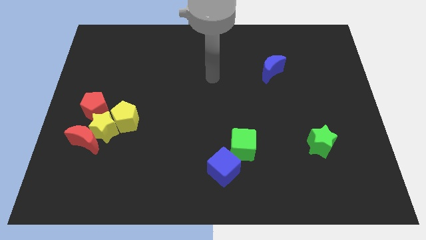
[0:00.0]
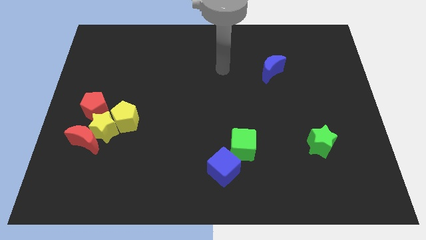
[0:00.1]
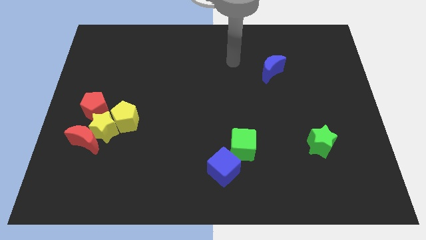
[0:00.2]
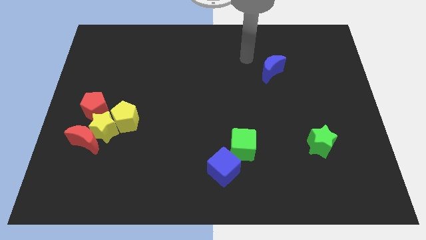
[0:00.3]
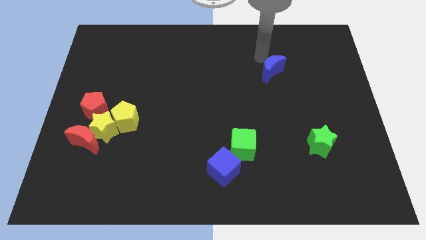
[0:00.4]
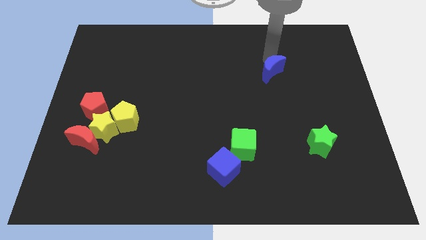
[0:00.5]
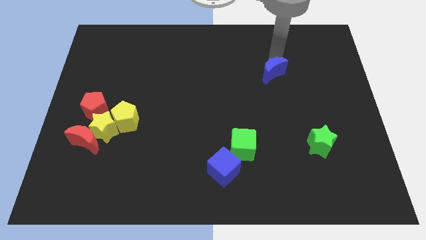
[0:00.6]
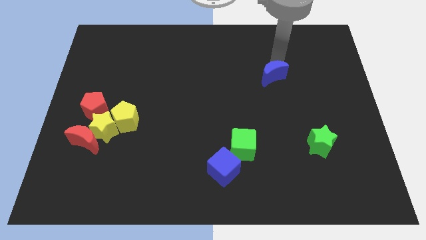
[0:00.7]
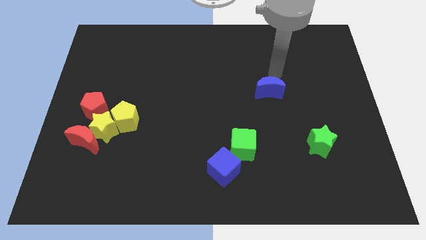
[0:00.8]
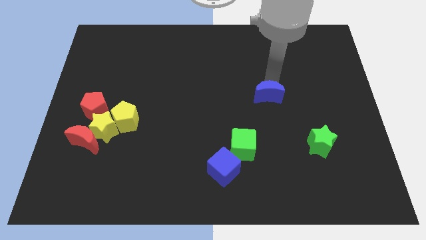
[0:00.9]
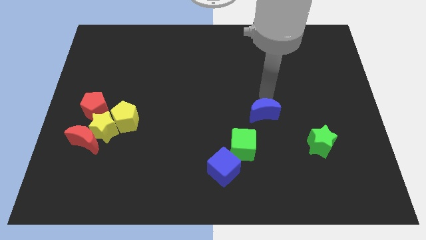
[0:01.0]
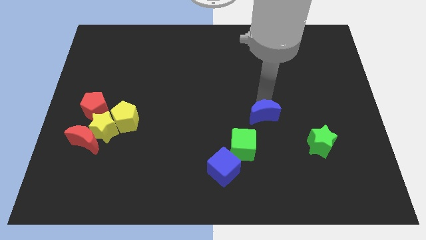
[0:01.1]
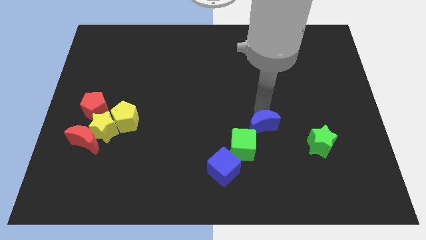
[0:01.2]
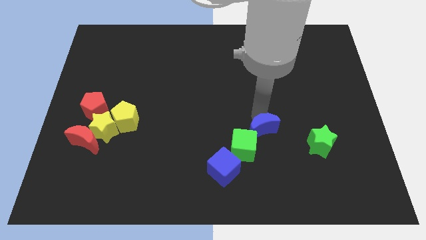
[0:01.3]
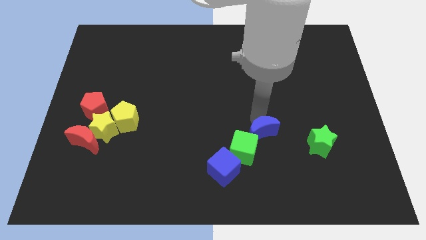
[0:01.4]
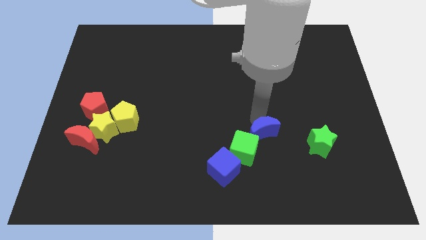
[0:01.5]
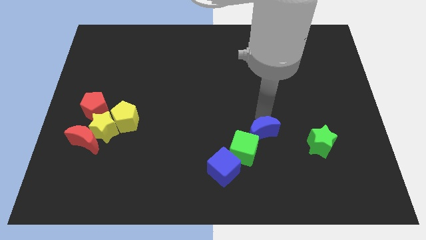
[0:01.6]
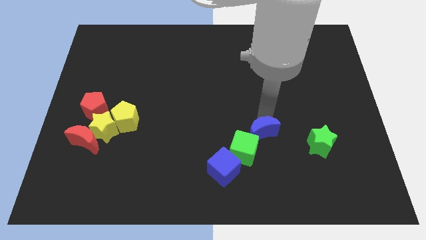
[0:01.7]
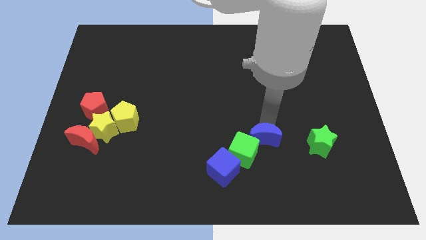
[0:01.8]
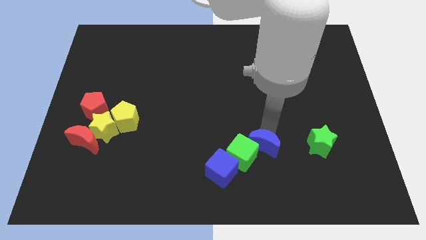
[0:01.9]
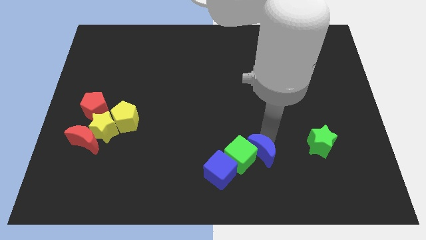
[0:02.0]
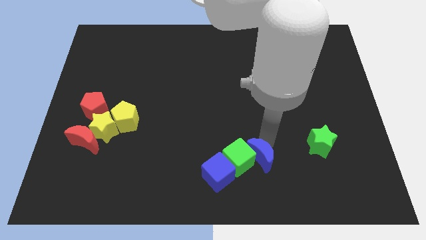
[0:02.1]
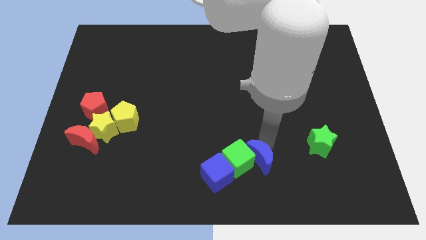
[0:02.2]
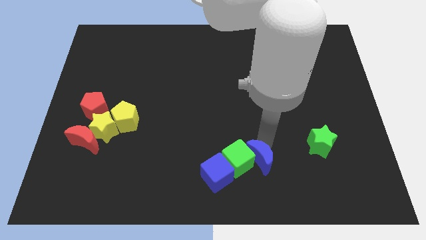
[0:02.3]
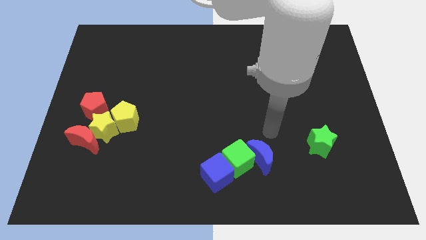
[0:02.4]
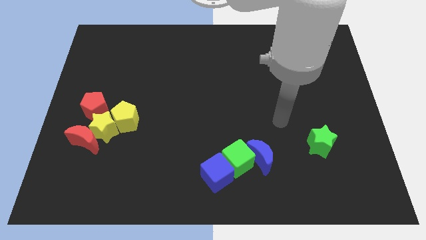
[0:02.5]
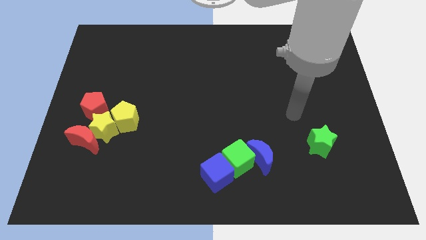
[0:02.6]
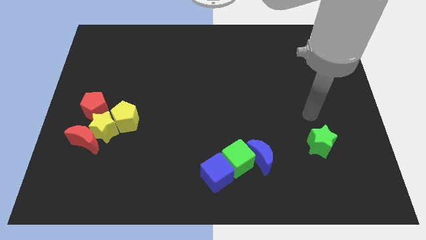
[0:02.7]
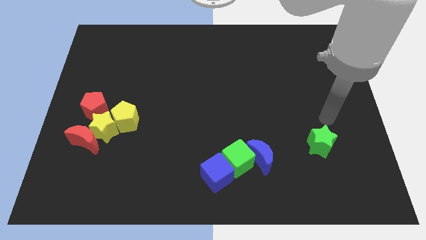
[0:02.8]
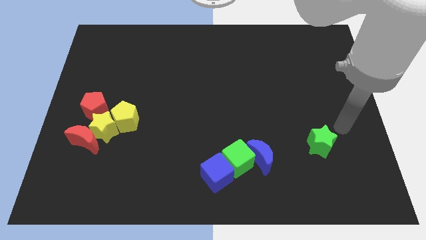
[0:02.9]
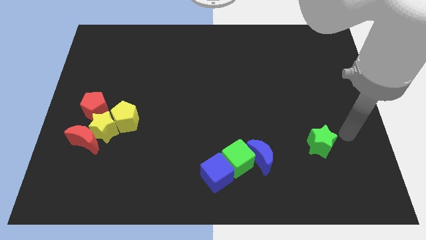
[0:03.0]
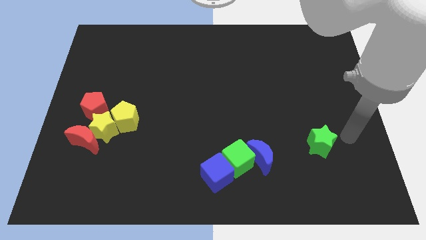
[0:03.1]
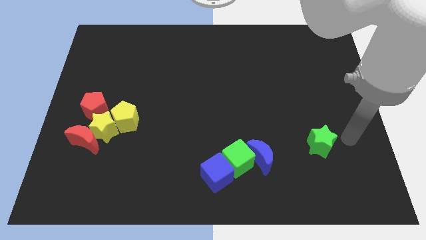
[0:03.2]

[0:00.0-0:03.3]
drag the blue moon towards the bottom center

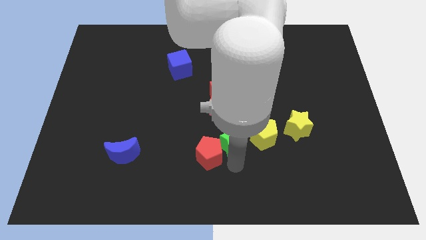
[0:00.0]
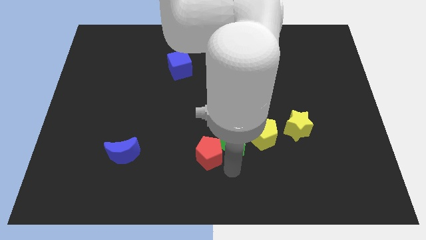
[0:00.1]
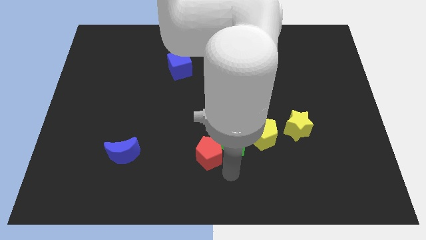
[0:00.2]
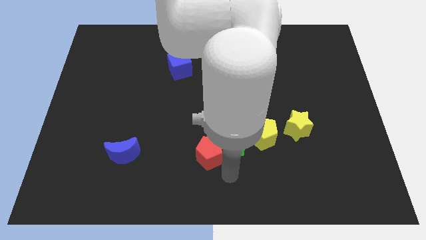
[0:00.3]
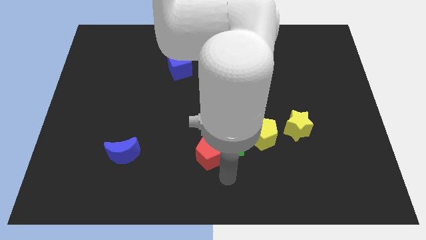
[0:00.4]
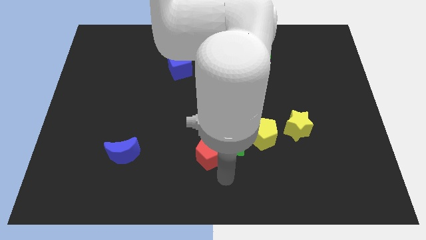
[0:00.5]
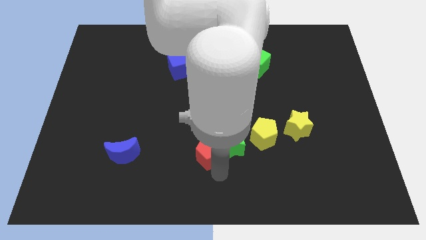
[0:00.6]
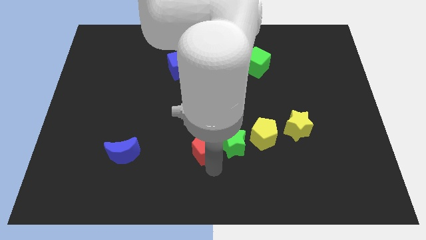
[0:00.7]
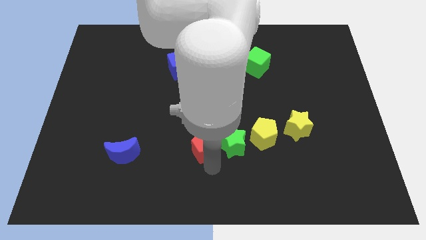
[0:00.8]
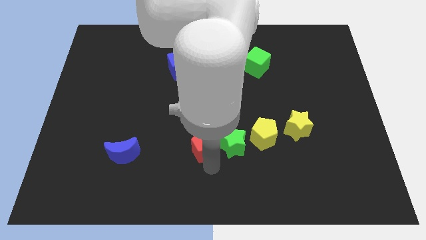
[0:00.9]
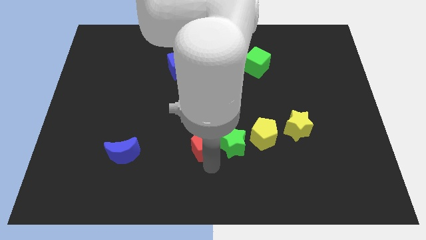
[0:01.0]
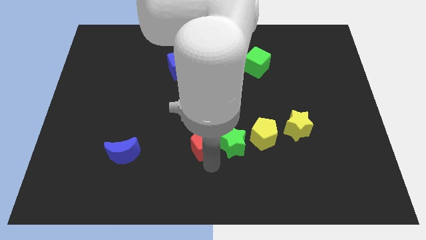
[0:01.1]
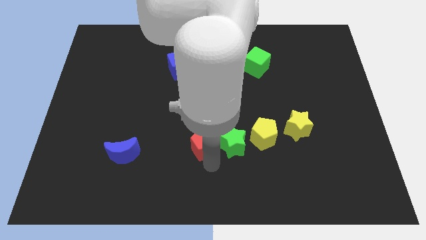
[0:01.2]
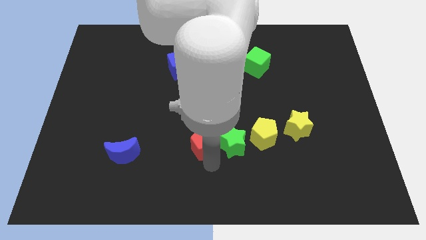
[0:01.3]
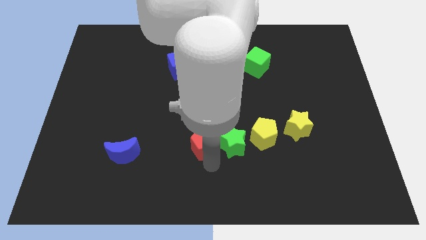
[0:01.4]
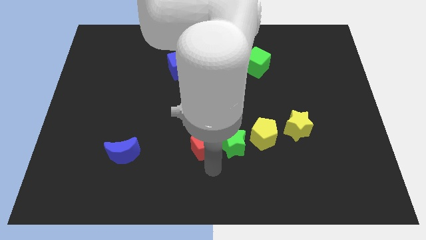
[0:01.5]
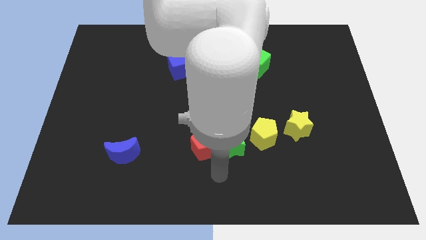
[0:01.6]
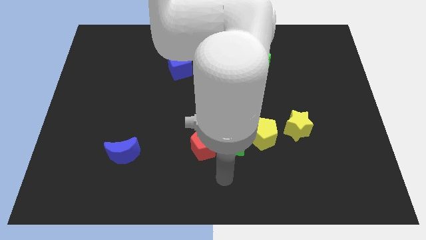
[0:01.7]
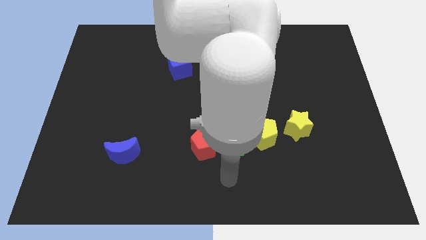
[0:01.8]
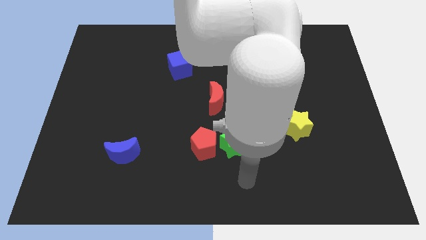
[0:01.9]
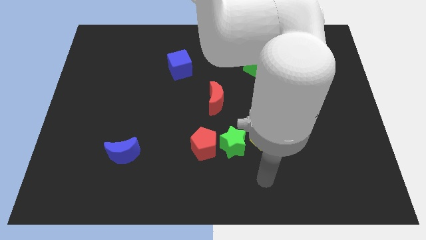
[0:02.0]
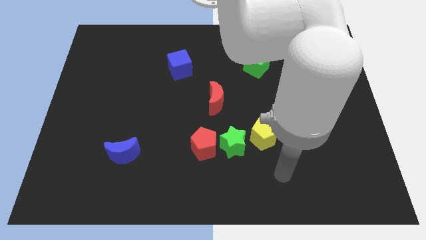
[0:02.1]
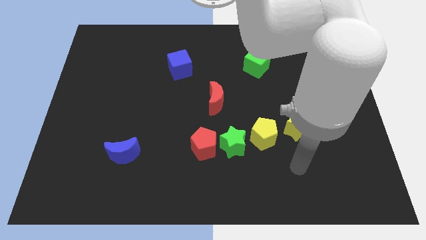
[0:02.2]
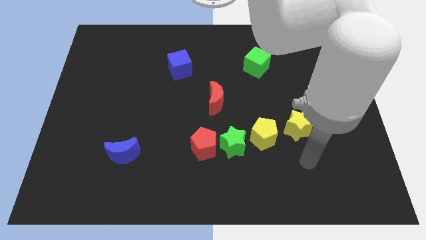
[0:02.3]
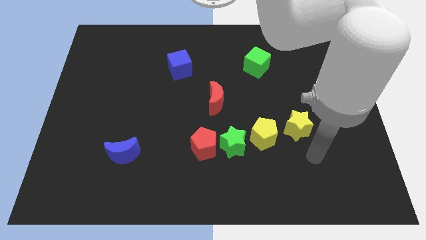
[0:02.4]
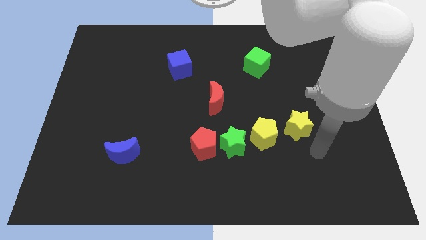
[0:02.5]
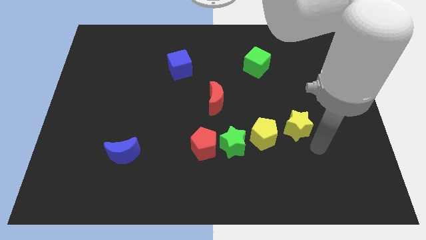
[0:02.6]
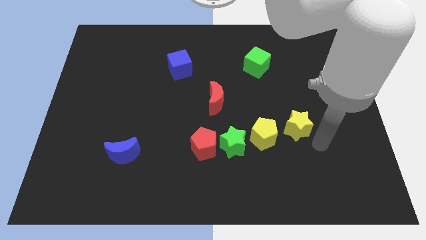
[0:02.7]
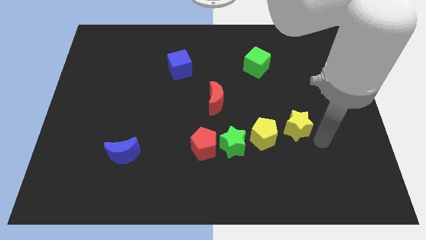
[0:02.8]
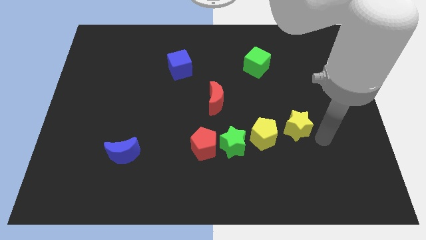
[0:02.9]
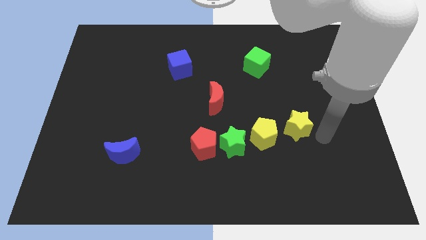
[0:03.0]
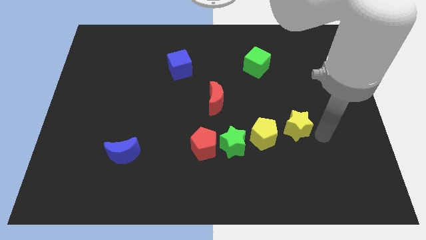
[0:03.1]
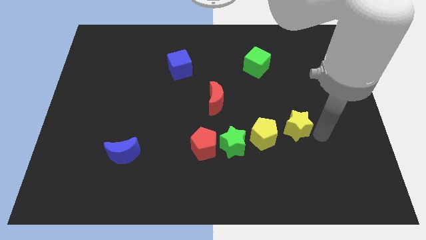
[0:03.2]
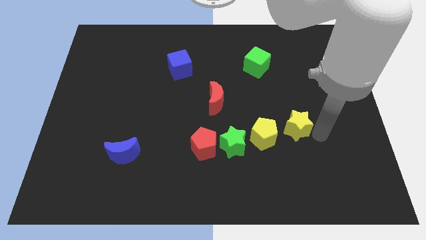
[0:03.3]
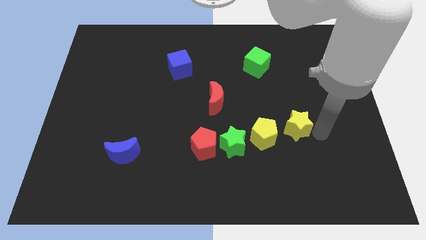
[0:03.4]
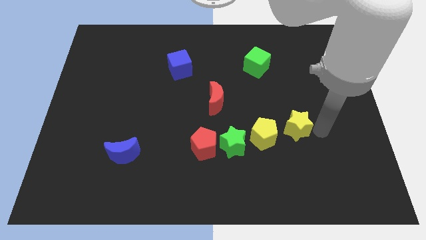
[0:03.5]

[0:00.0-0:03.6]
slightly move the red pentagon to the left of the green star

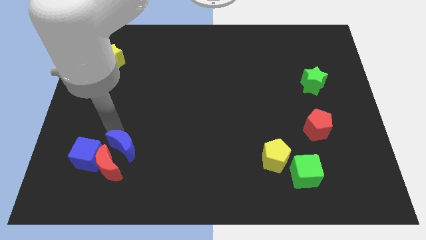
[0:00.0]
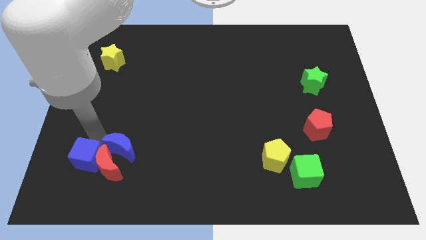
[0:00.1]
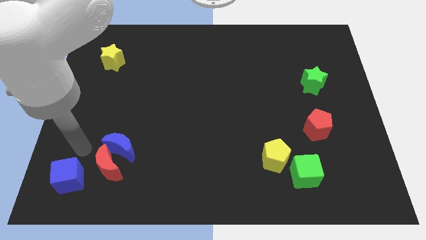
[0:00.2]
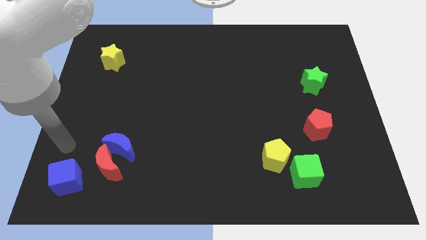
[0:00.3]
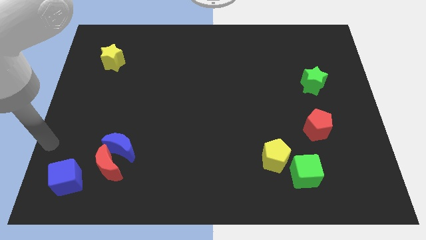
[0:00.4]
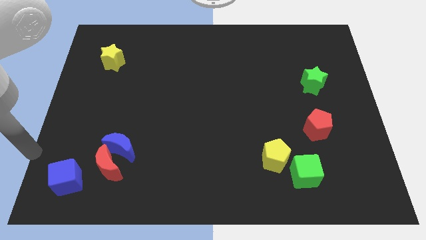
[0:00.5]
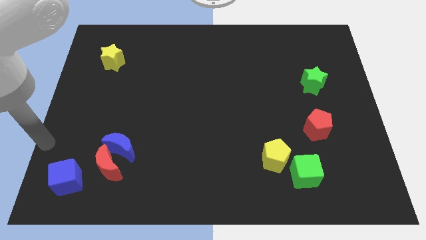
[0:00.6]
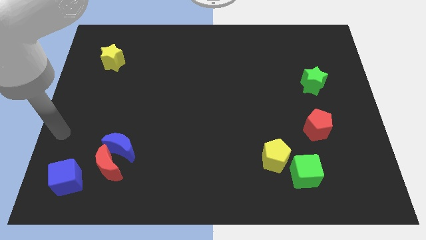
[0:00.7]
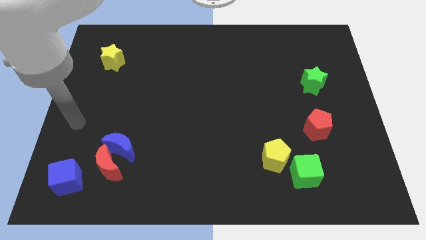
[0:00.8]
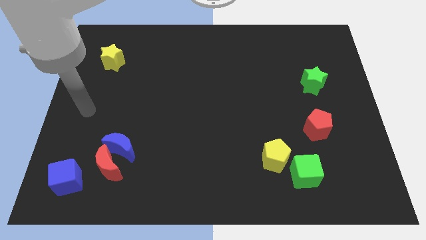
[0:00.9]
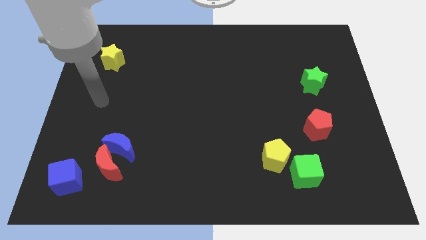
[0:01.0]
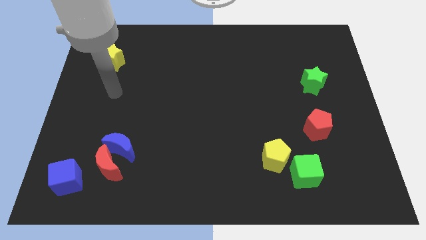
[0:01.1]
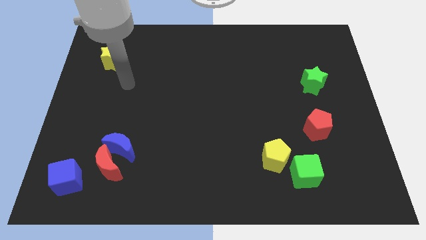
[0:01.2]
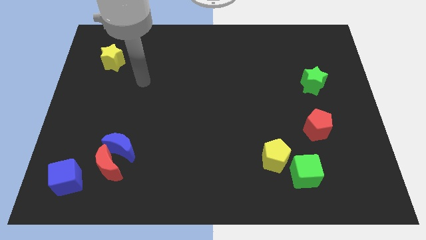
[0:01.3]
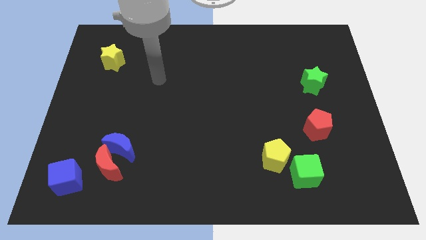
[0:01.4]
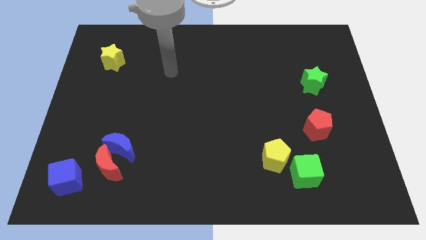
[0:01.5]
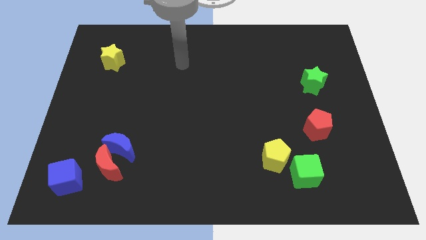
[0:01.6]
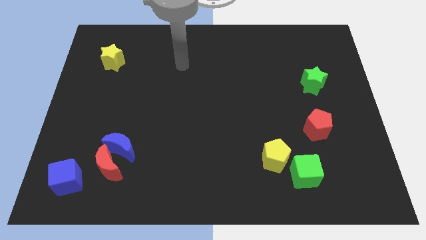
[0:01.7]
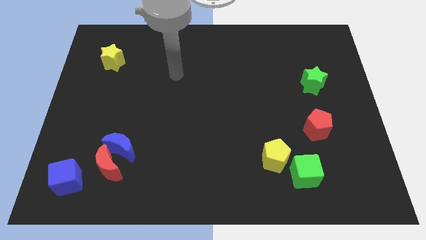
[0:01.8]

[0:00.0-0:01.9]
separate blue cube from blue moon

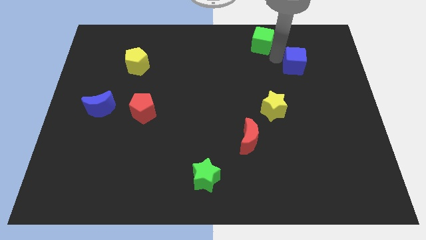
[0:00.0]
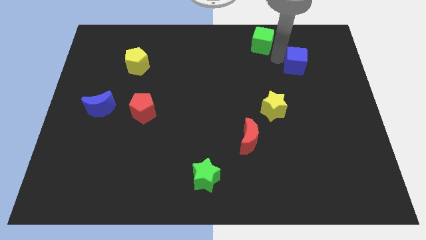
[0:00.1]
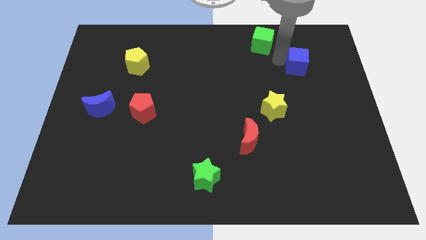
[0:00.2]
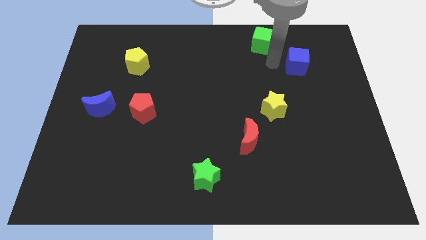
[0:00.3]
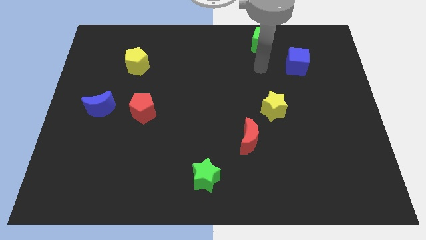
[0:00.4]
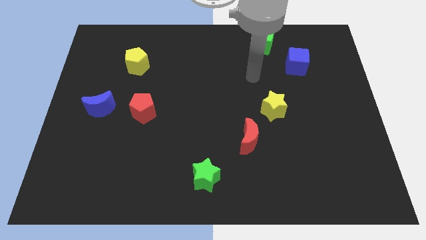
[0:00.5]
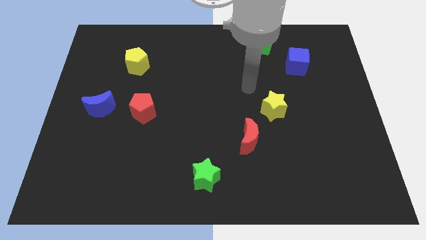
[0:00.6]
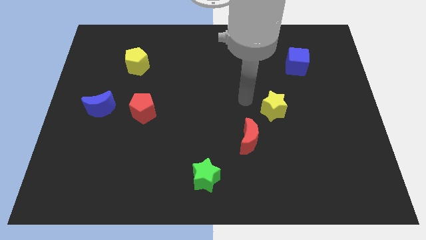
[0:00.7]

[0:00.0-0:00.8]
move the arm towards the left of the yellow star
